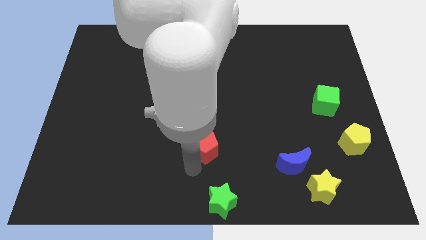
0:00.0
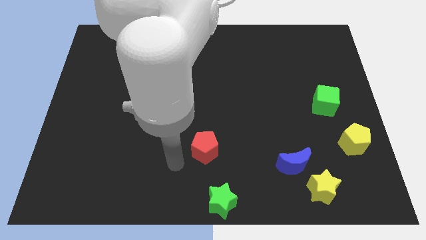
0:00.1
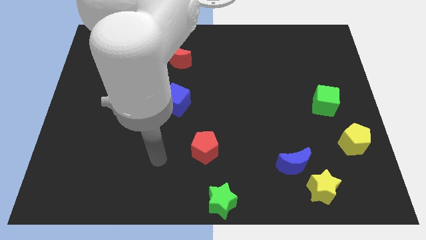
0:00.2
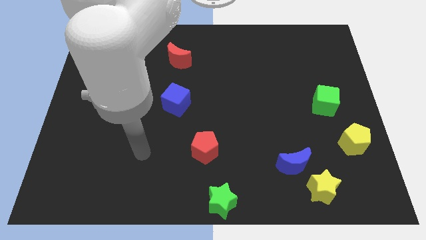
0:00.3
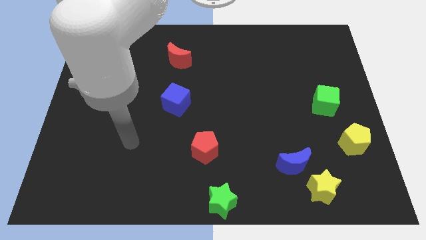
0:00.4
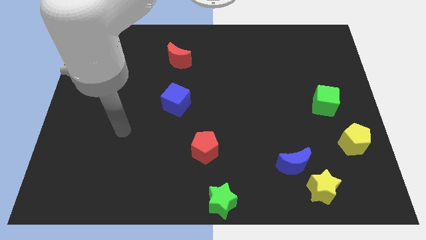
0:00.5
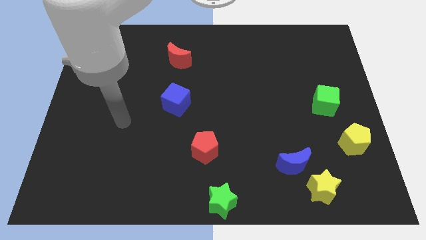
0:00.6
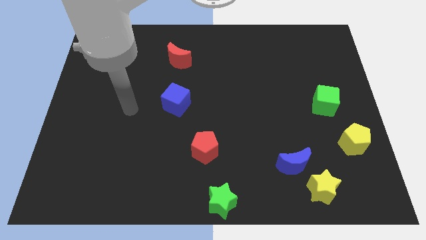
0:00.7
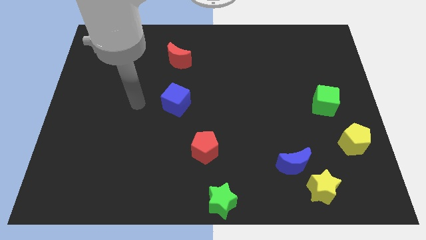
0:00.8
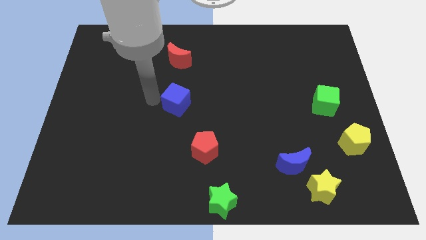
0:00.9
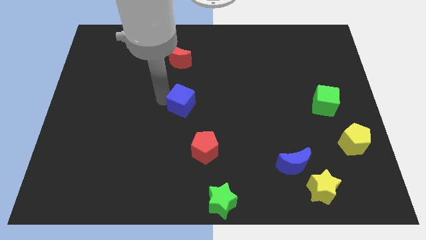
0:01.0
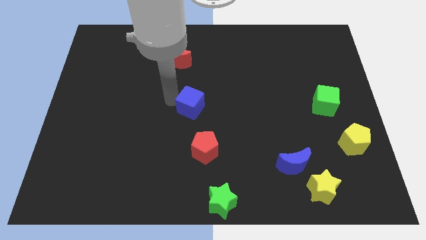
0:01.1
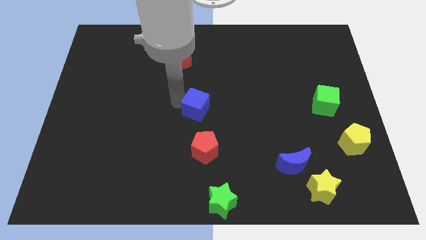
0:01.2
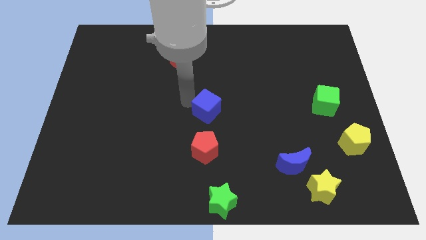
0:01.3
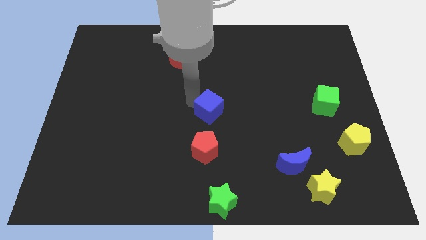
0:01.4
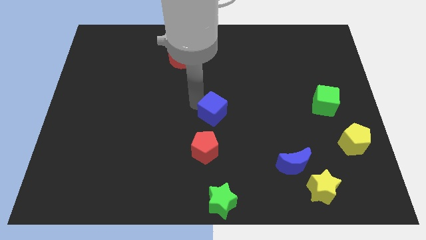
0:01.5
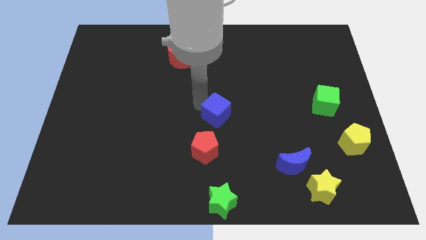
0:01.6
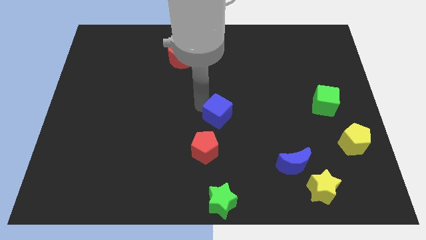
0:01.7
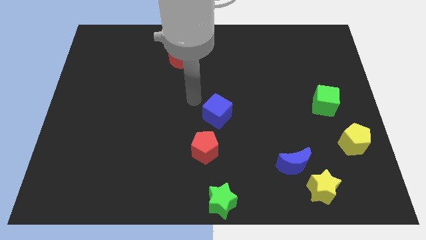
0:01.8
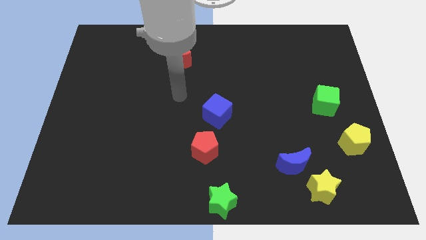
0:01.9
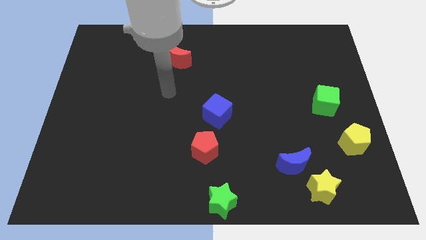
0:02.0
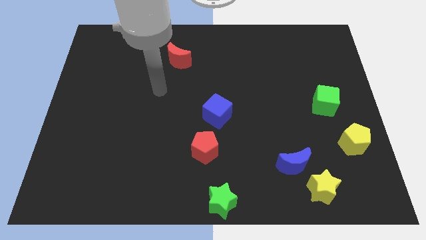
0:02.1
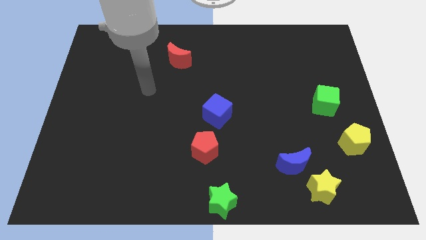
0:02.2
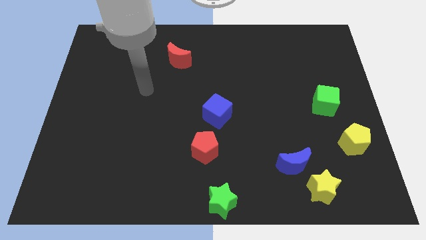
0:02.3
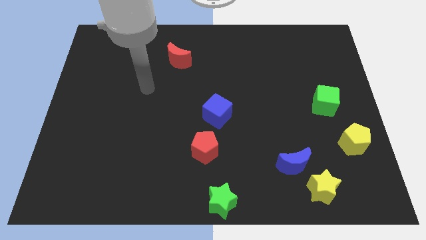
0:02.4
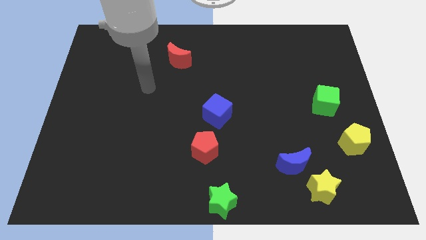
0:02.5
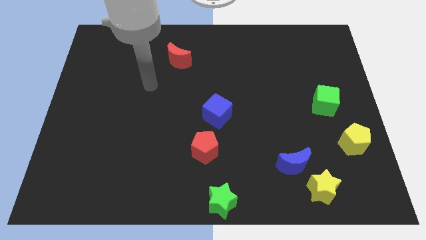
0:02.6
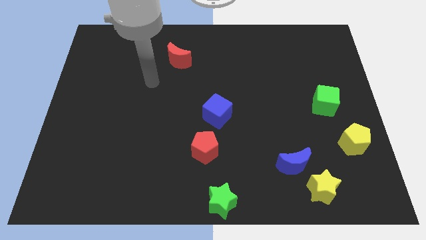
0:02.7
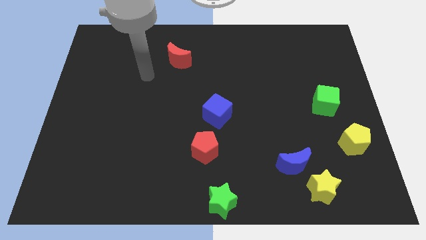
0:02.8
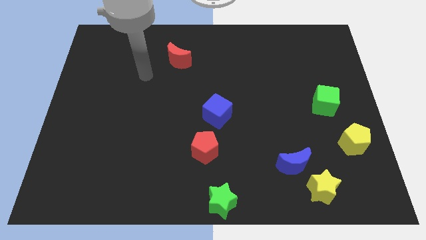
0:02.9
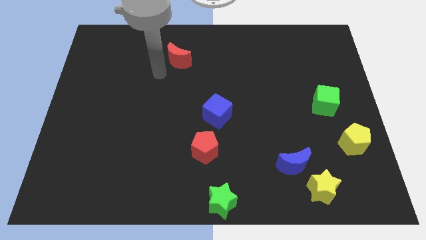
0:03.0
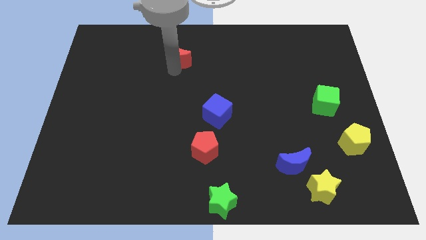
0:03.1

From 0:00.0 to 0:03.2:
move the blue cube close to the red pentagon

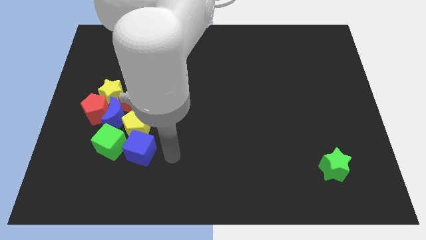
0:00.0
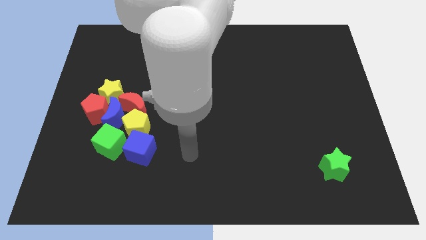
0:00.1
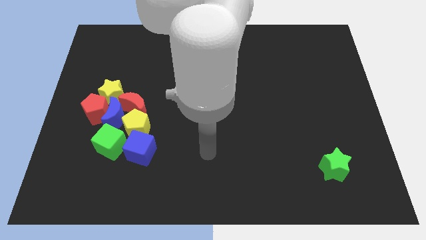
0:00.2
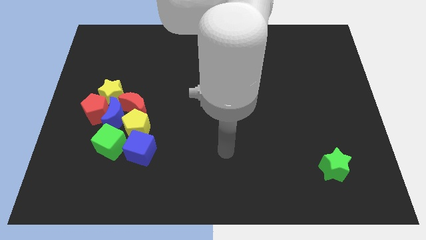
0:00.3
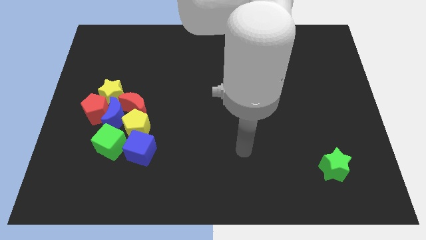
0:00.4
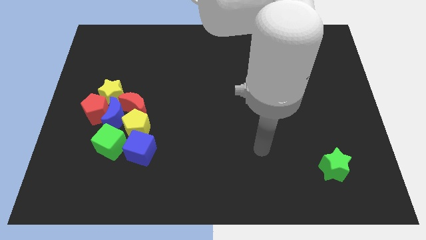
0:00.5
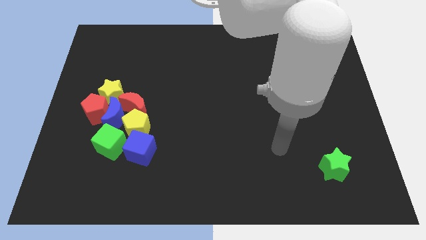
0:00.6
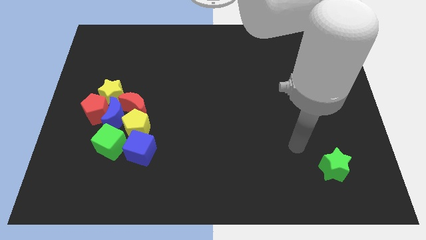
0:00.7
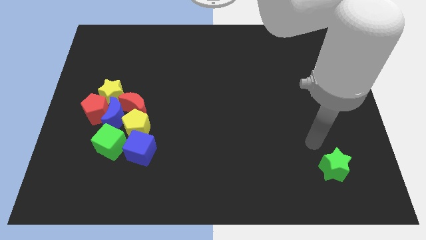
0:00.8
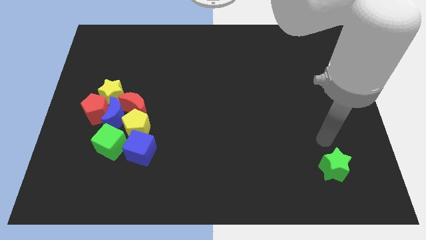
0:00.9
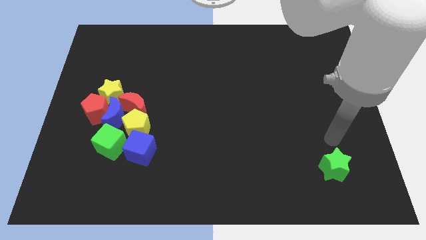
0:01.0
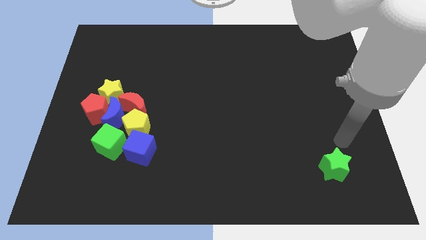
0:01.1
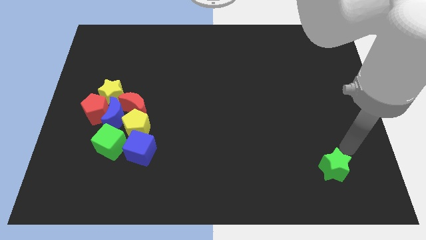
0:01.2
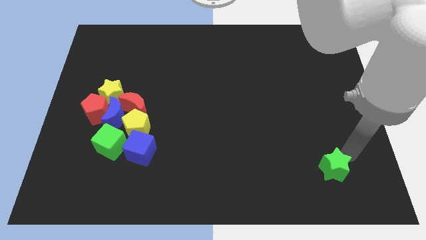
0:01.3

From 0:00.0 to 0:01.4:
place the arm diagonally to the green star

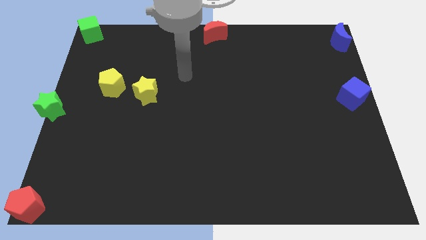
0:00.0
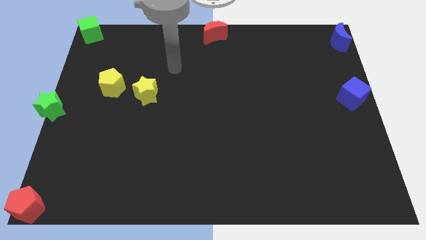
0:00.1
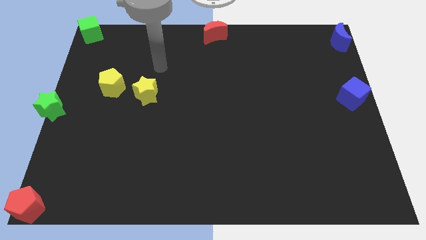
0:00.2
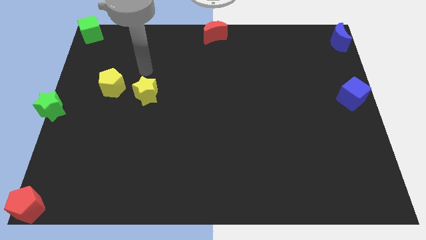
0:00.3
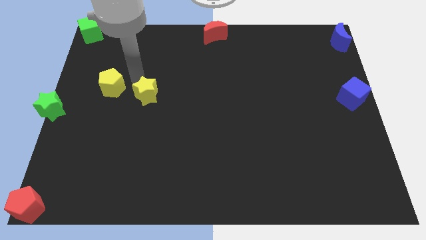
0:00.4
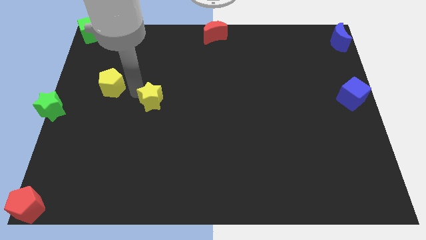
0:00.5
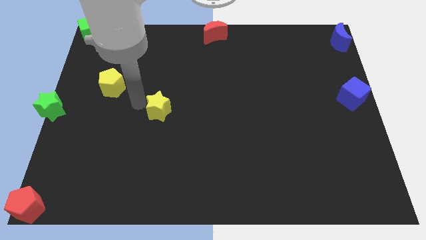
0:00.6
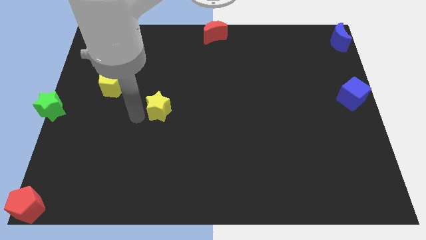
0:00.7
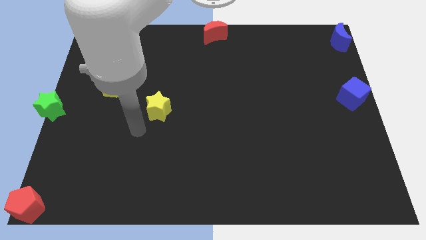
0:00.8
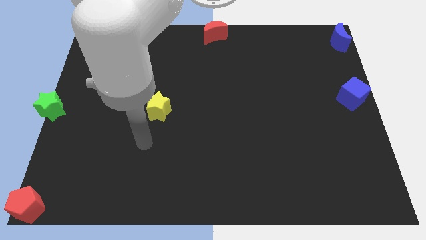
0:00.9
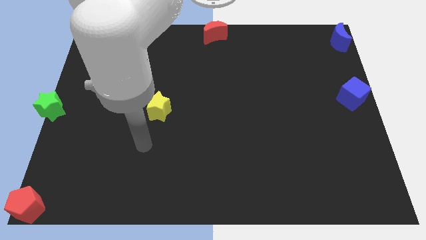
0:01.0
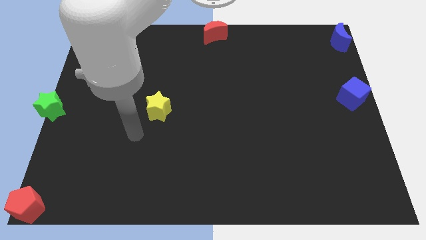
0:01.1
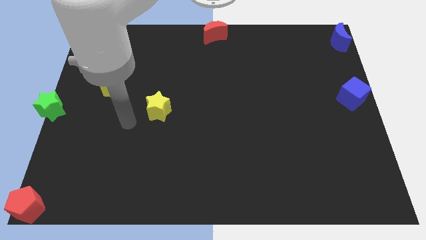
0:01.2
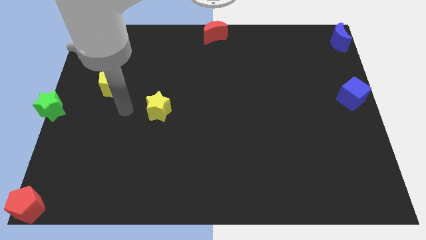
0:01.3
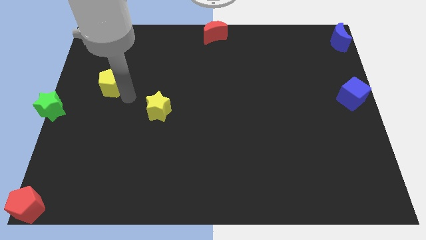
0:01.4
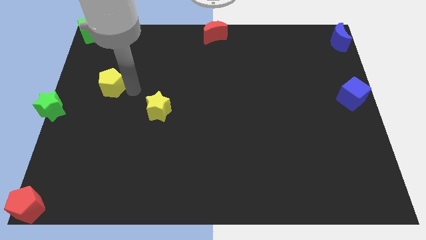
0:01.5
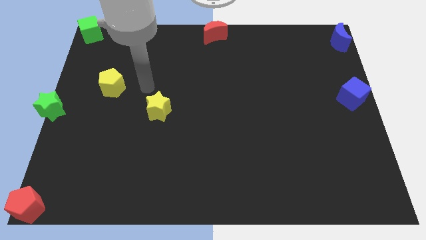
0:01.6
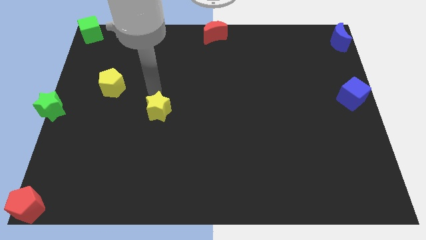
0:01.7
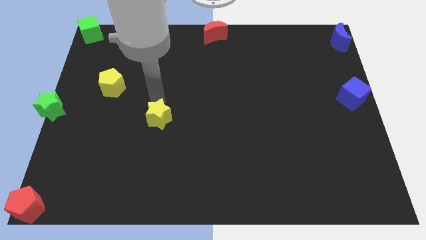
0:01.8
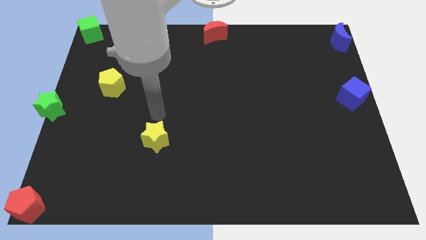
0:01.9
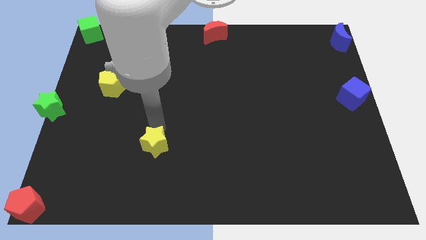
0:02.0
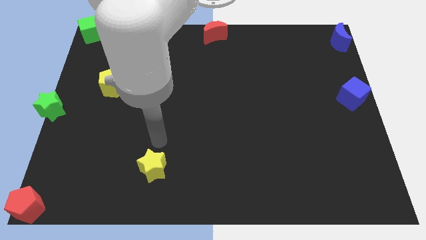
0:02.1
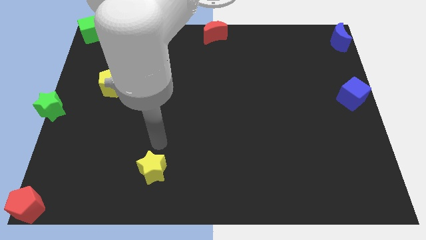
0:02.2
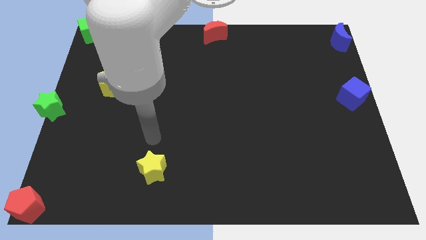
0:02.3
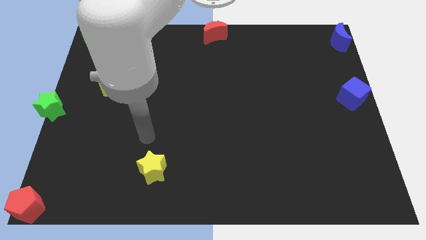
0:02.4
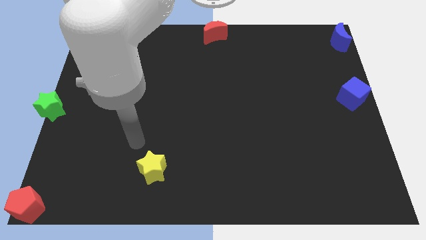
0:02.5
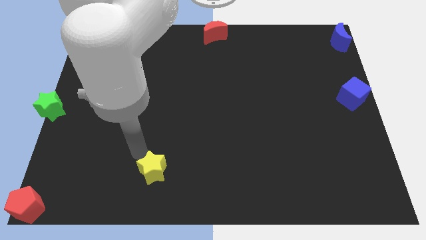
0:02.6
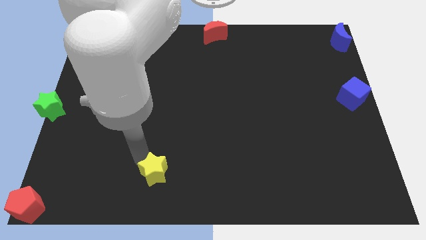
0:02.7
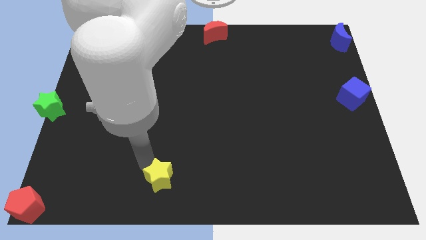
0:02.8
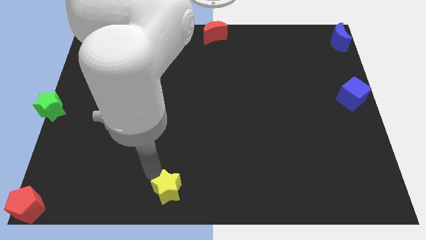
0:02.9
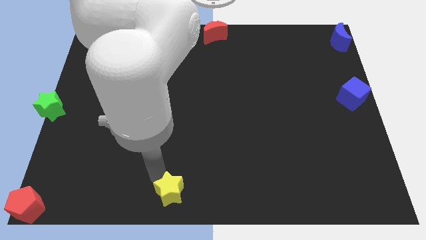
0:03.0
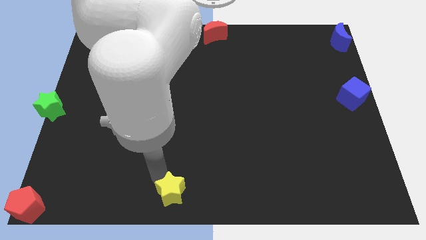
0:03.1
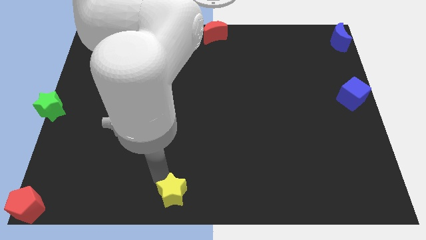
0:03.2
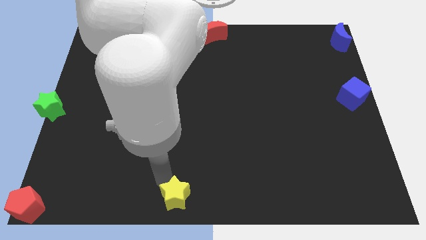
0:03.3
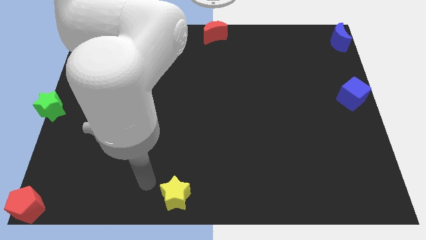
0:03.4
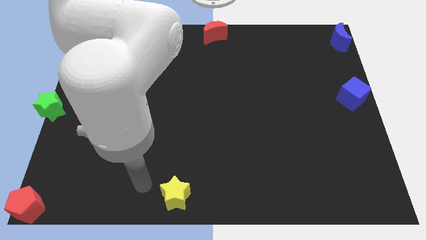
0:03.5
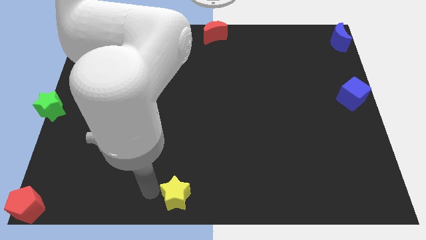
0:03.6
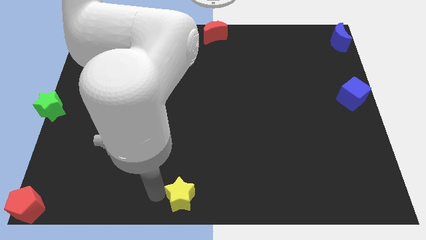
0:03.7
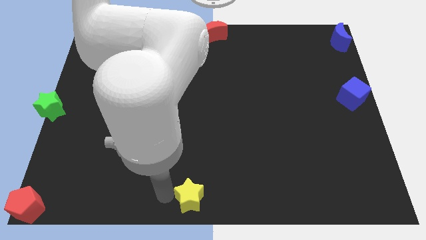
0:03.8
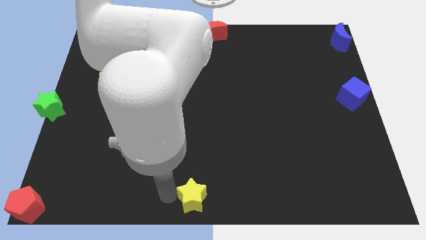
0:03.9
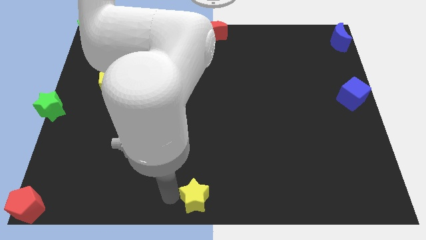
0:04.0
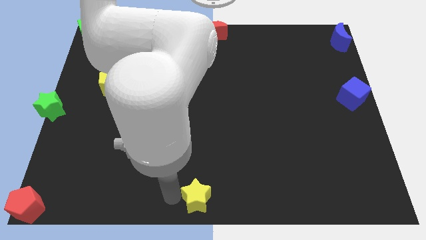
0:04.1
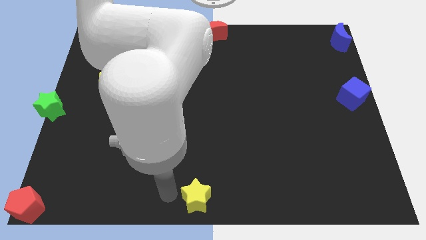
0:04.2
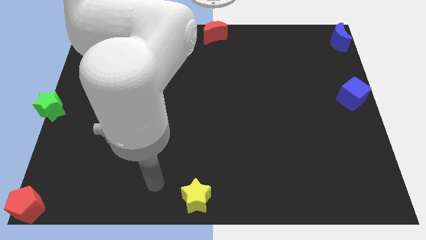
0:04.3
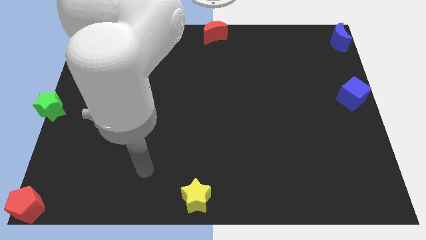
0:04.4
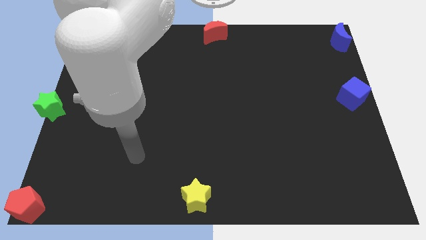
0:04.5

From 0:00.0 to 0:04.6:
push the yellow star to the bottom center of the board

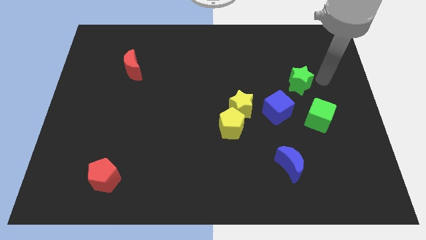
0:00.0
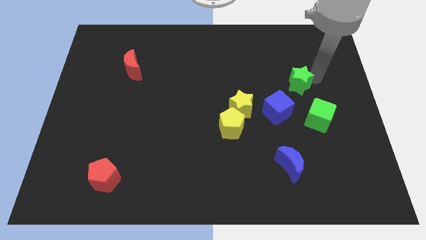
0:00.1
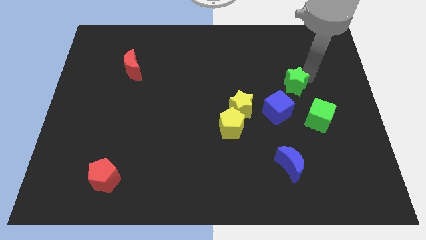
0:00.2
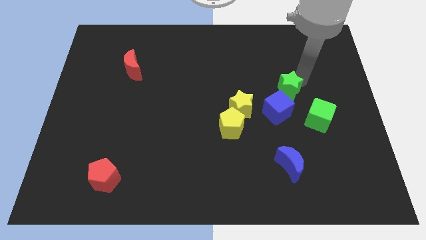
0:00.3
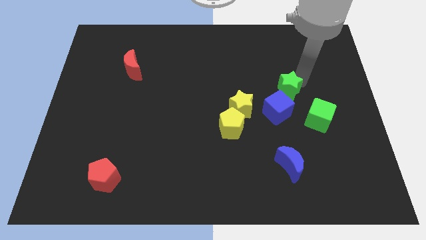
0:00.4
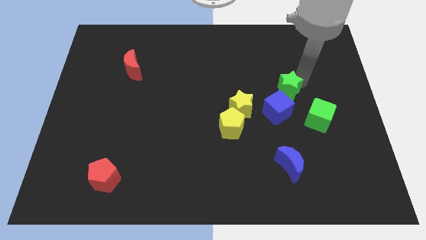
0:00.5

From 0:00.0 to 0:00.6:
slightly move the green star towards the blue cube
